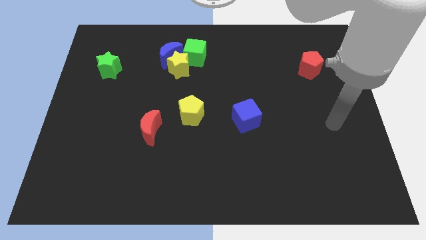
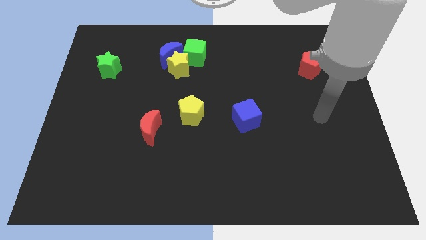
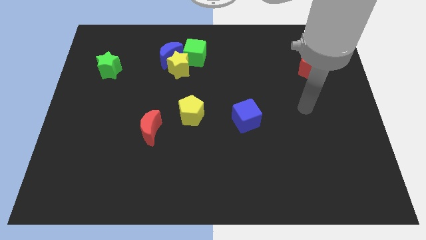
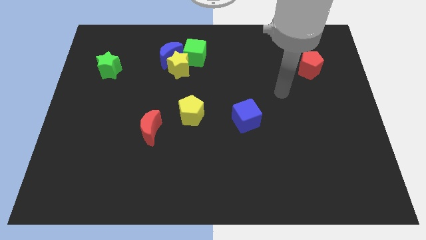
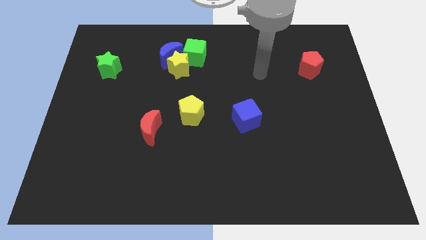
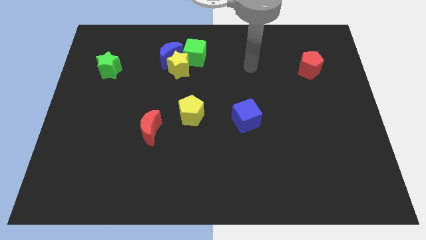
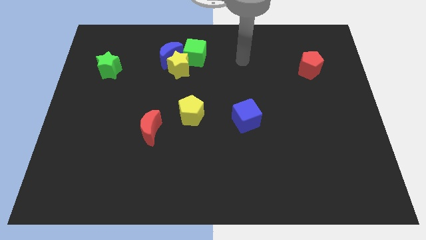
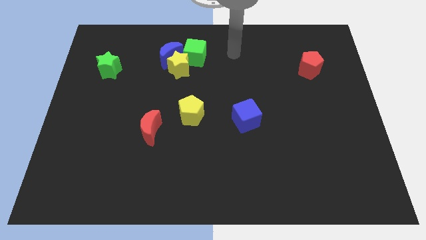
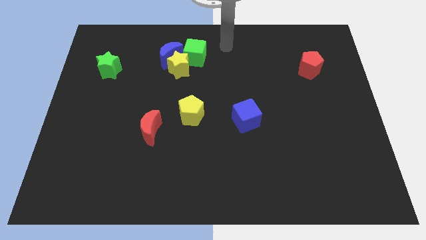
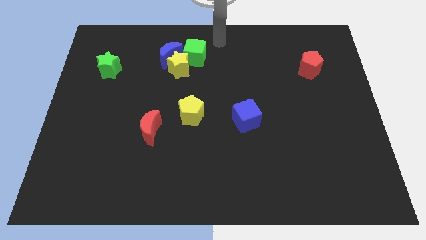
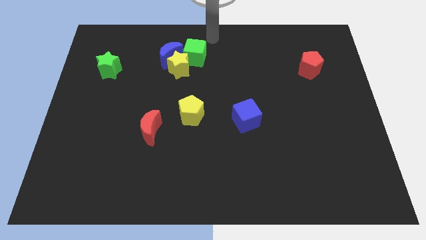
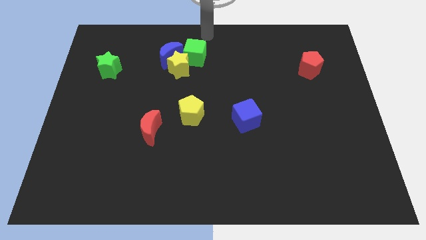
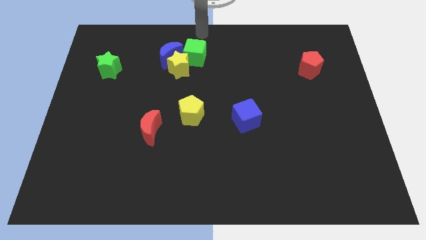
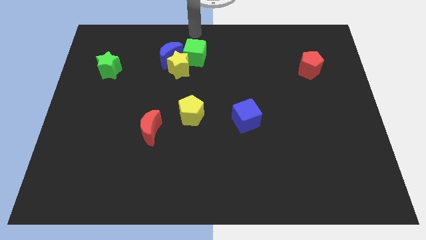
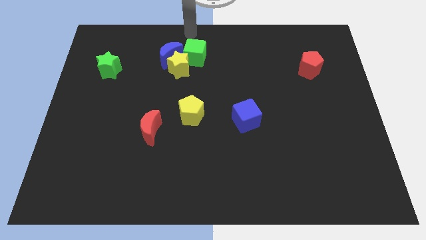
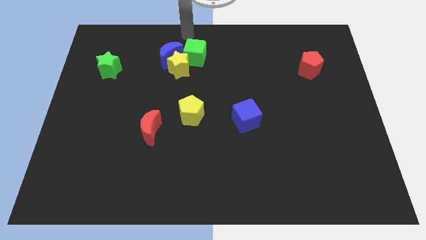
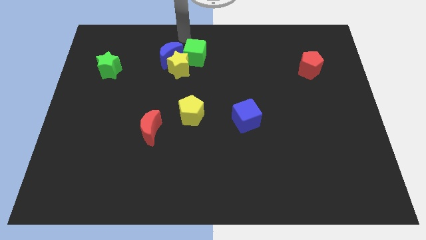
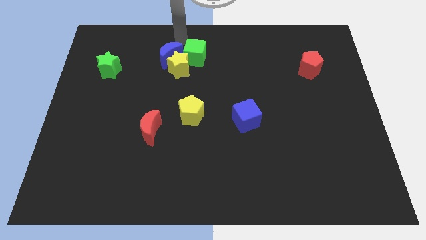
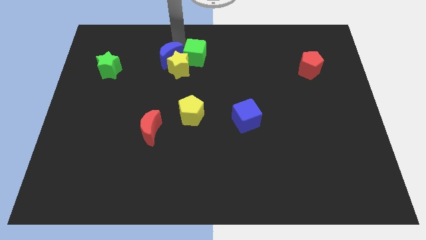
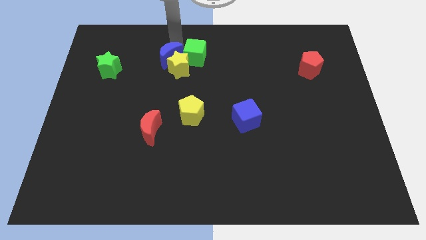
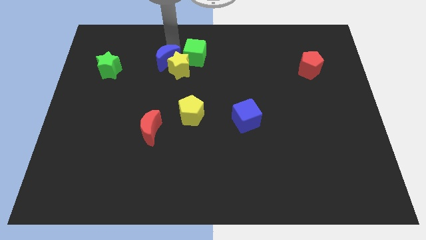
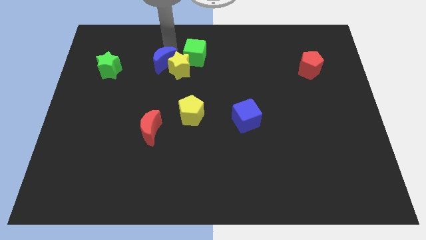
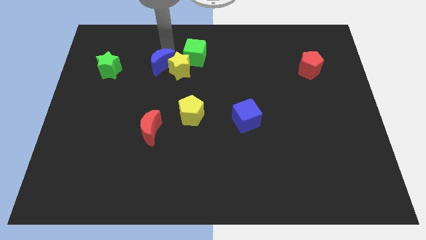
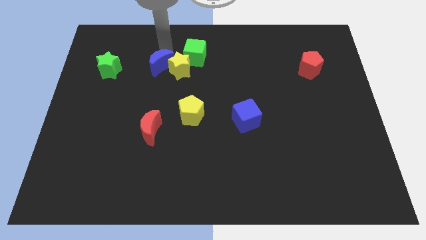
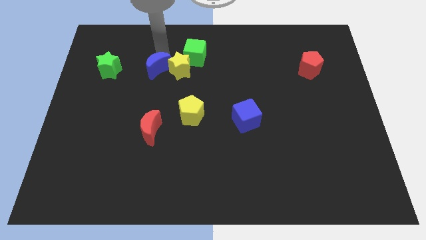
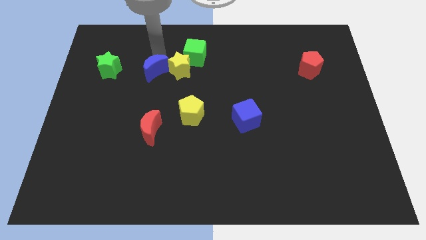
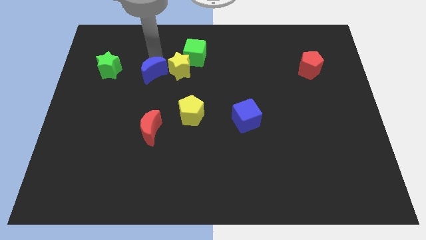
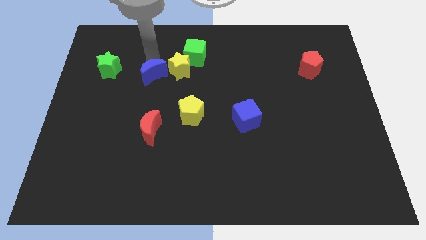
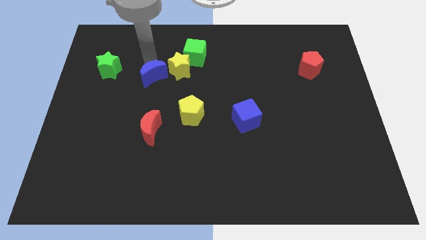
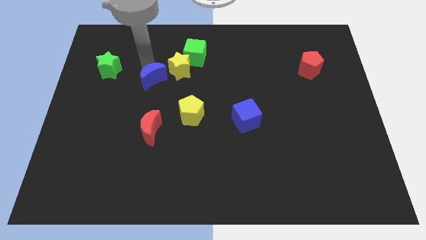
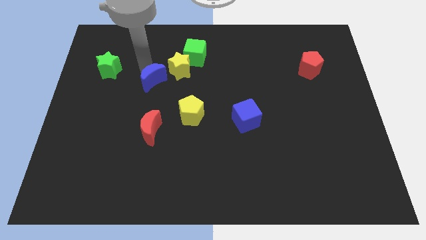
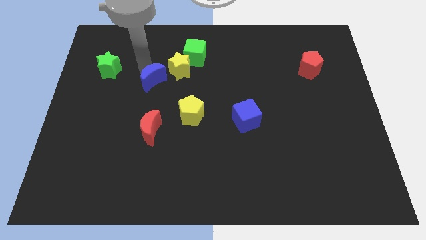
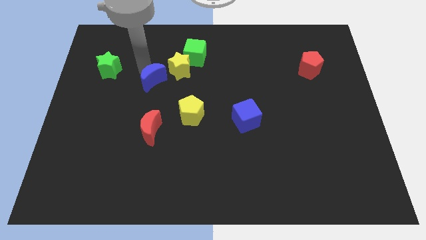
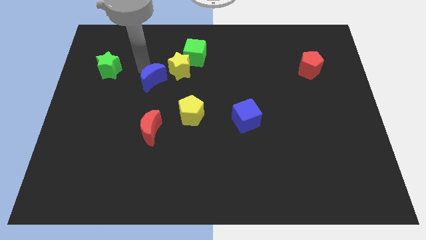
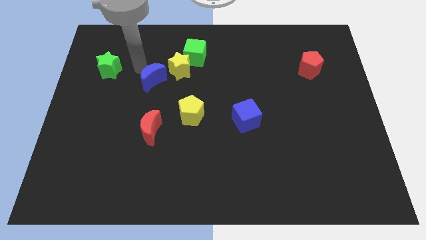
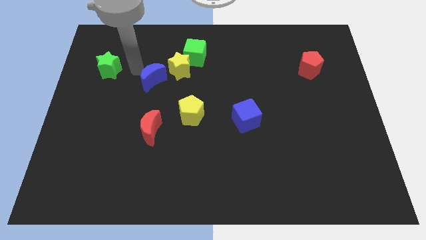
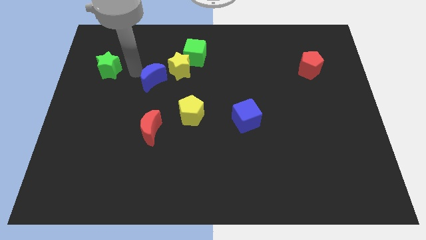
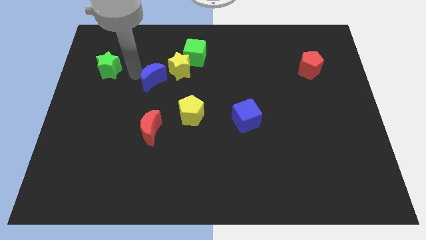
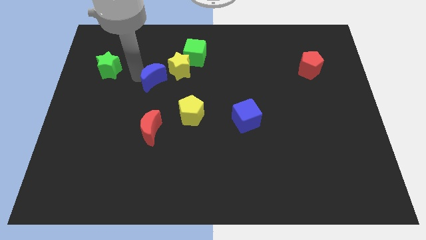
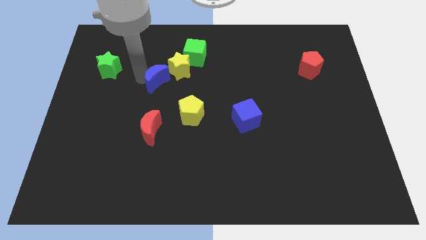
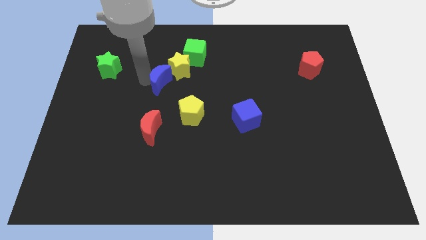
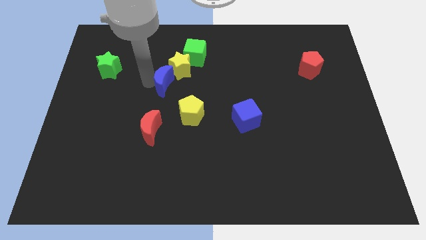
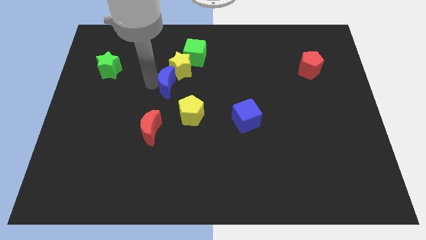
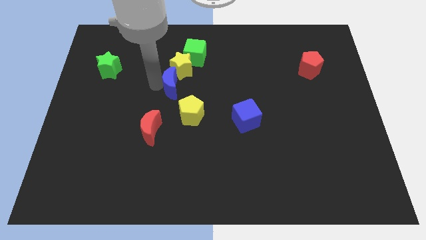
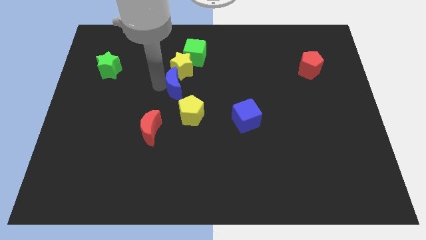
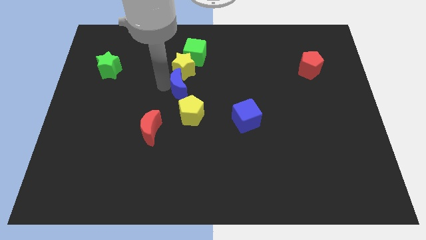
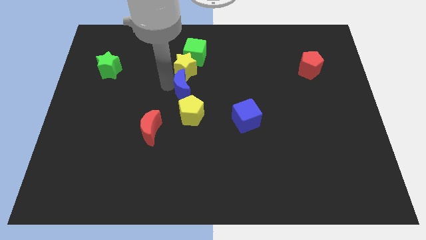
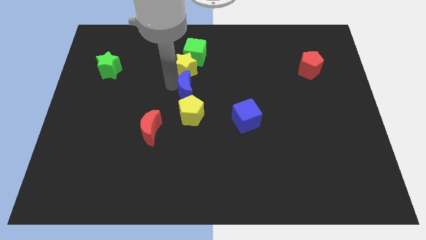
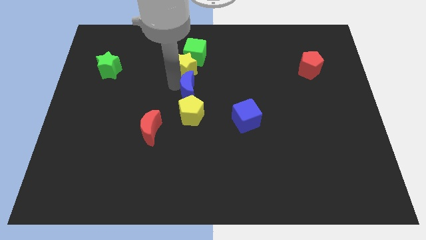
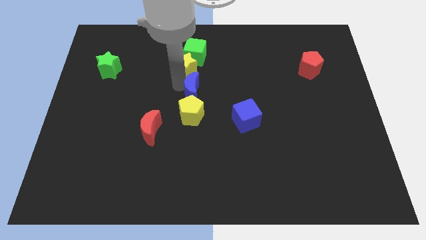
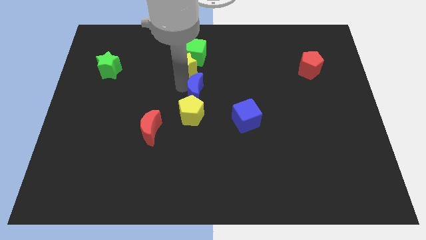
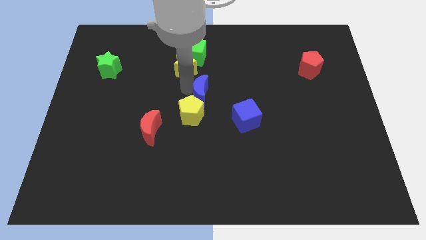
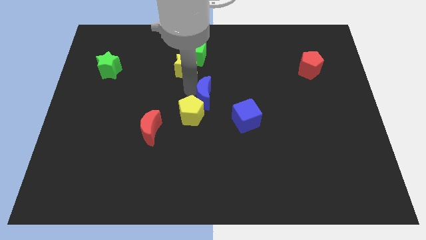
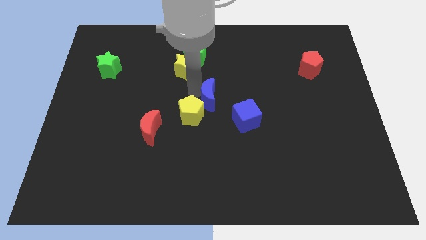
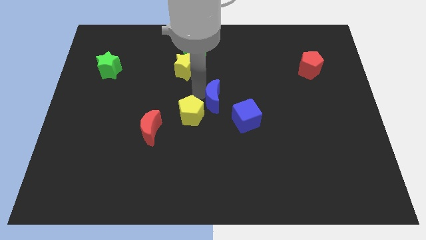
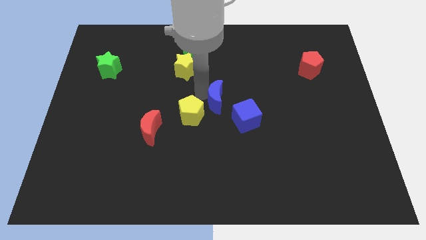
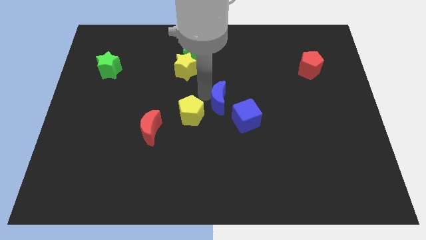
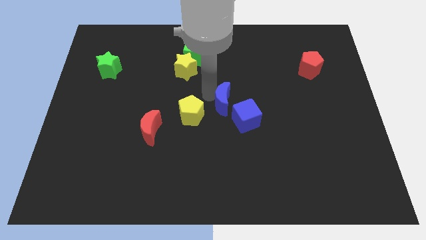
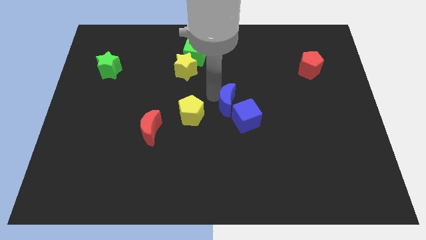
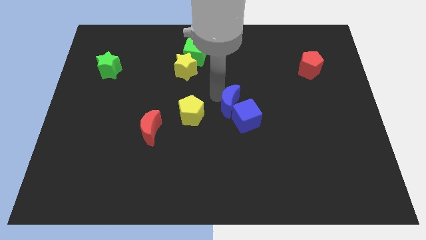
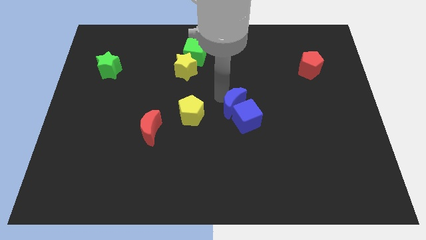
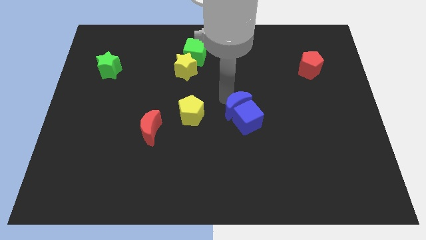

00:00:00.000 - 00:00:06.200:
slide the blue moon next to the blue cube

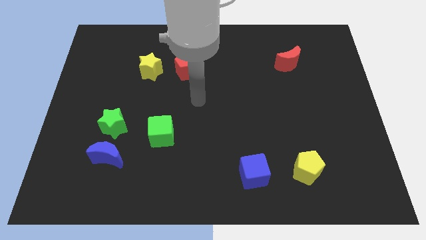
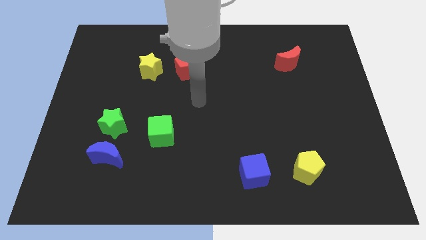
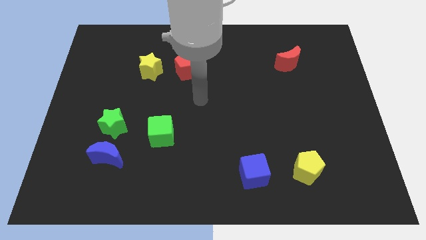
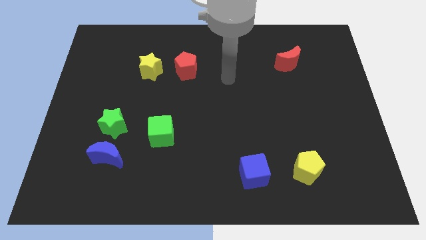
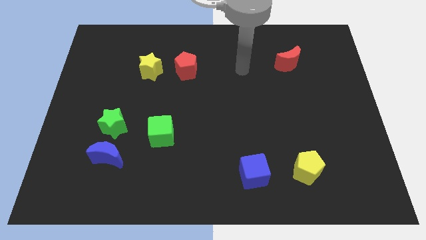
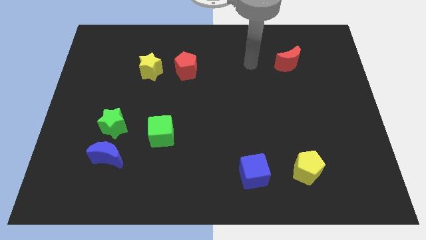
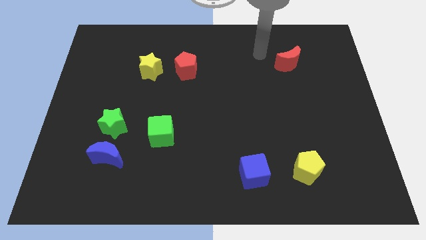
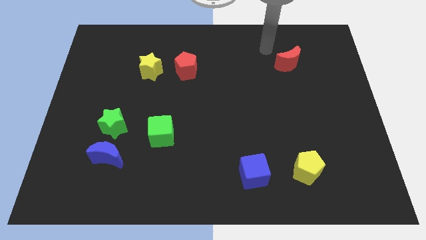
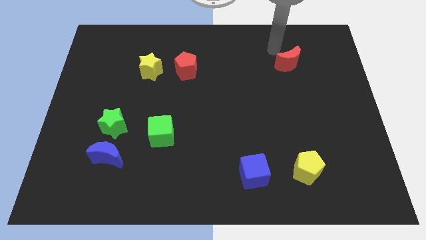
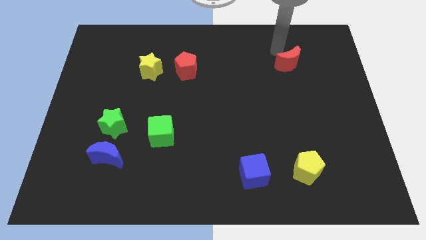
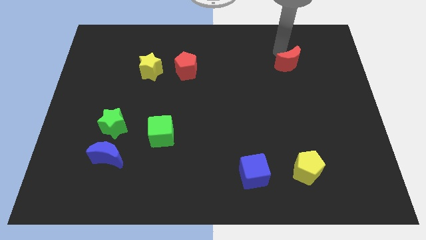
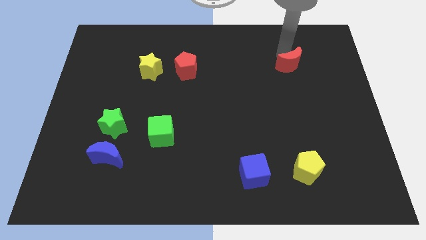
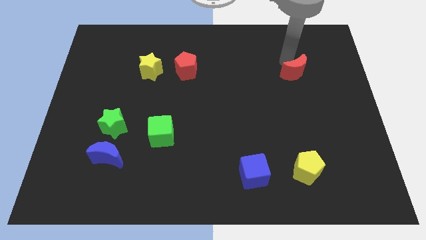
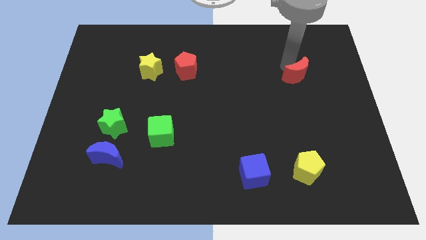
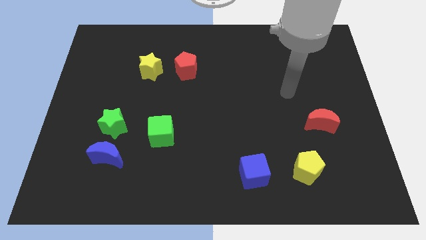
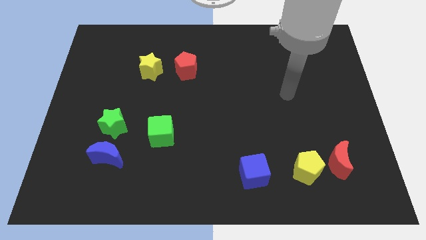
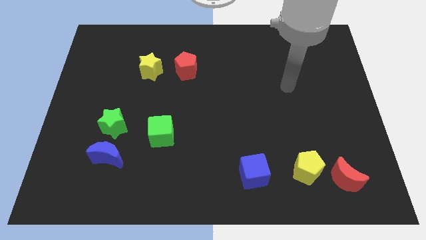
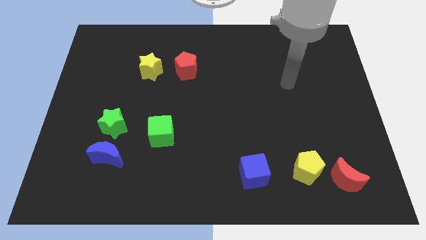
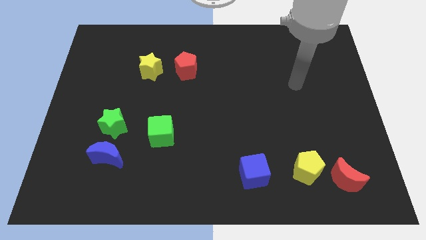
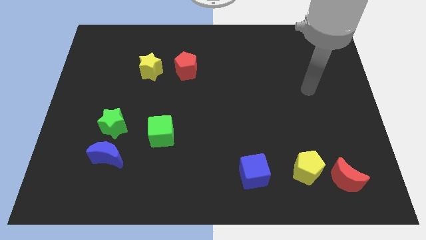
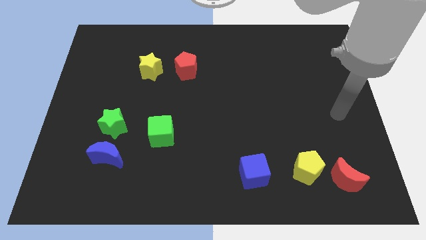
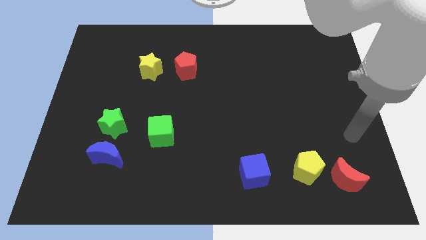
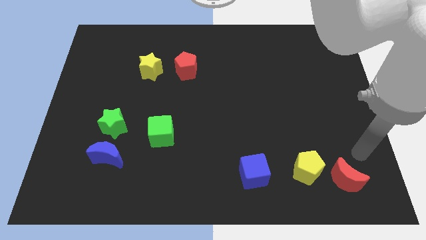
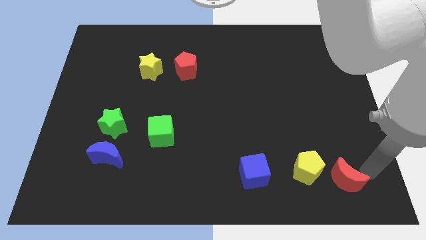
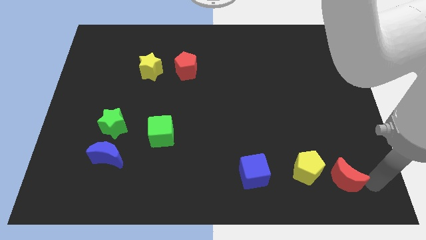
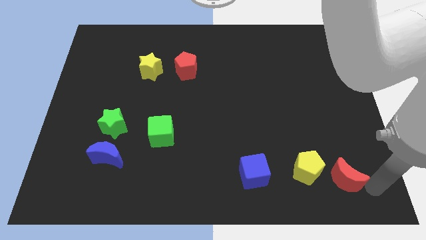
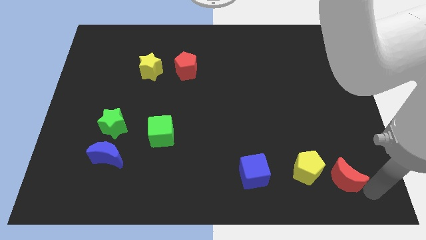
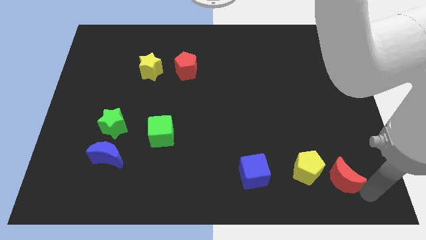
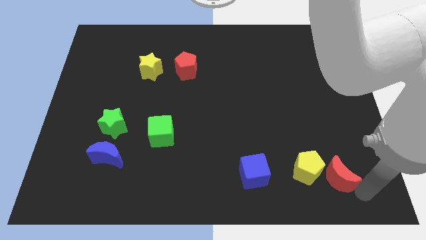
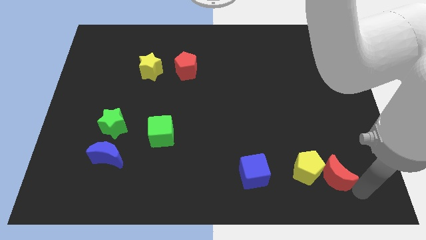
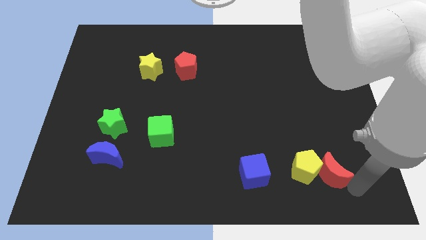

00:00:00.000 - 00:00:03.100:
put the red moon to the yellow pentagon
